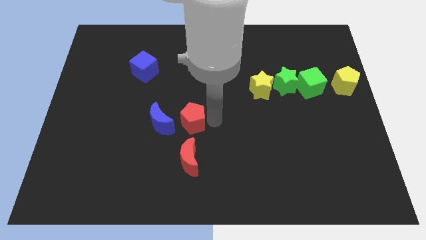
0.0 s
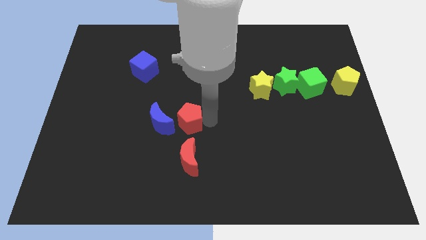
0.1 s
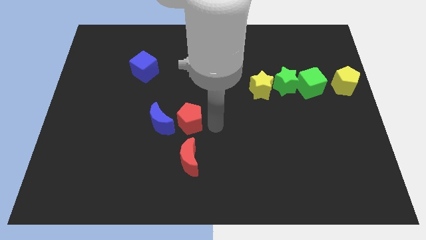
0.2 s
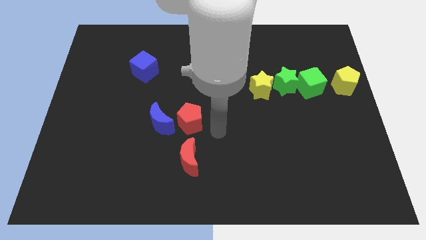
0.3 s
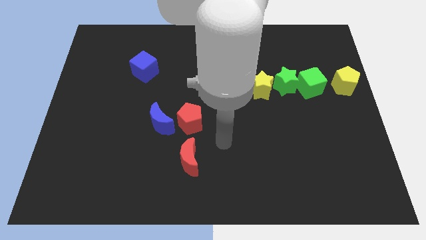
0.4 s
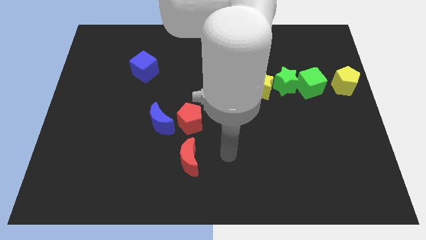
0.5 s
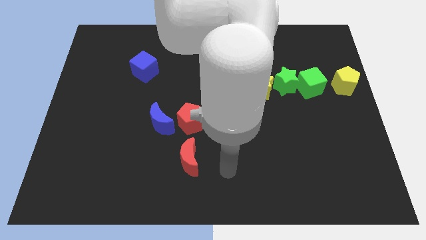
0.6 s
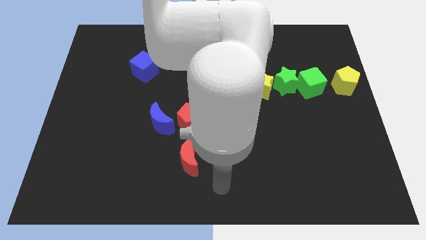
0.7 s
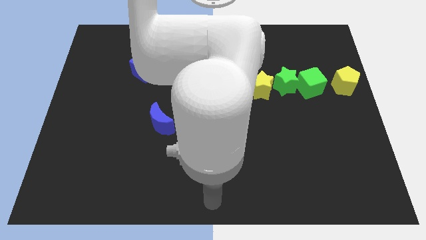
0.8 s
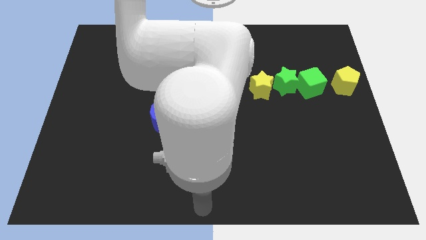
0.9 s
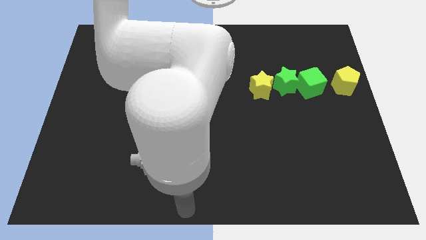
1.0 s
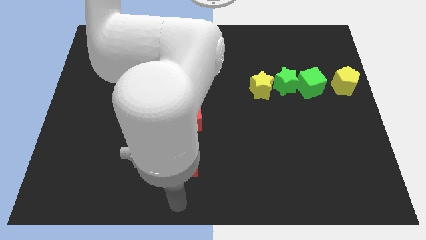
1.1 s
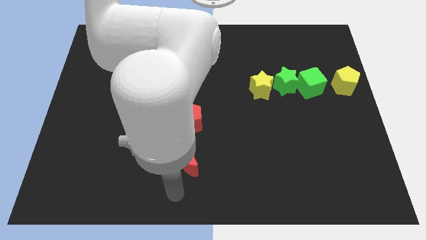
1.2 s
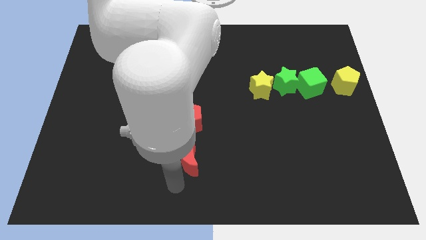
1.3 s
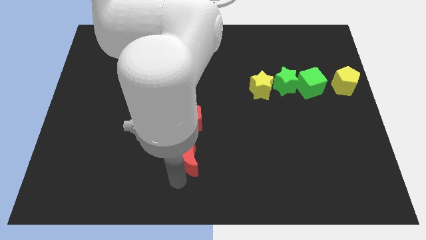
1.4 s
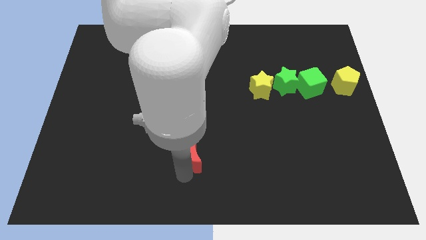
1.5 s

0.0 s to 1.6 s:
point your arm below red moon

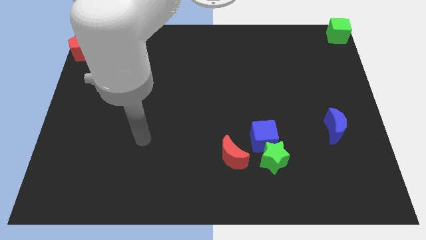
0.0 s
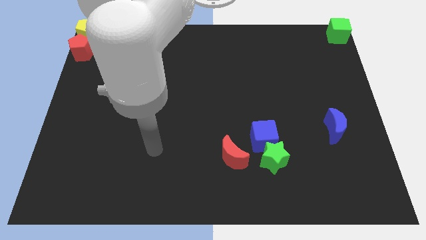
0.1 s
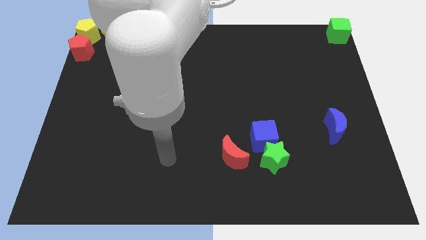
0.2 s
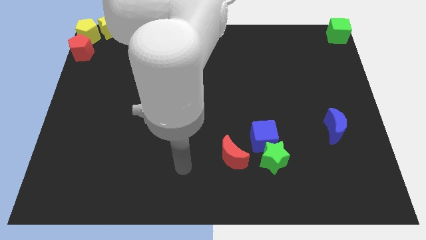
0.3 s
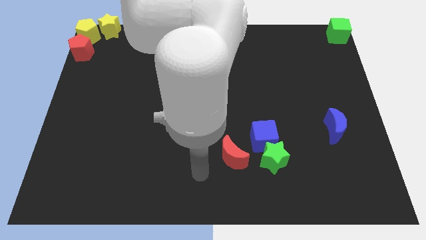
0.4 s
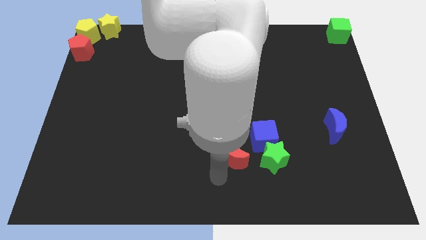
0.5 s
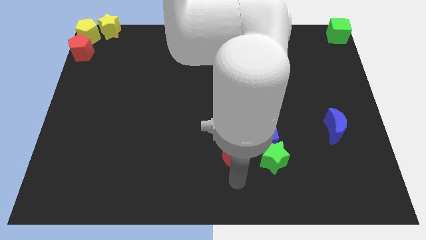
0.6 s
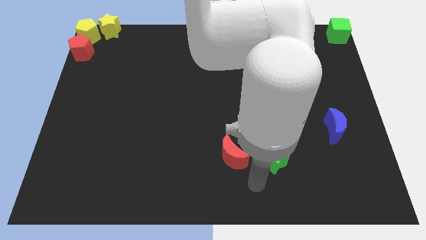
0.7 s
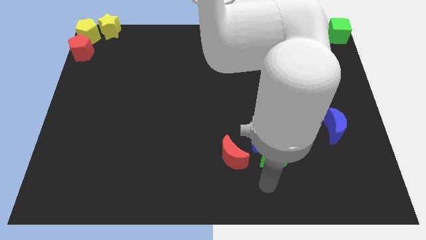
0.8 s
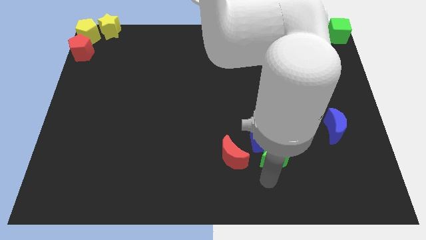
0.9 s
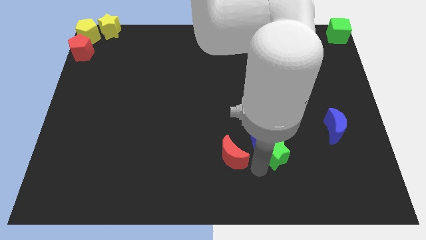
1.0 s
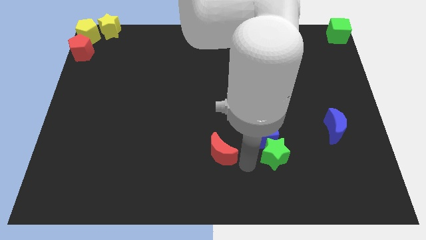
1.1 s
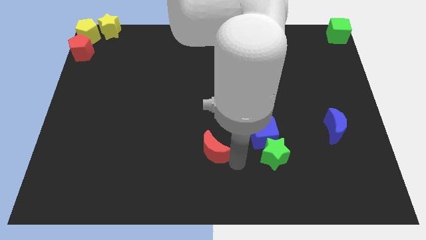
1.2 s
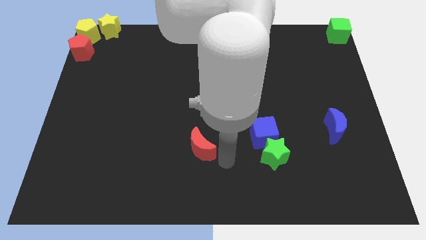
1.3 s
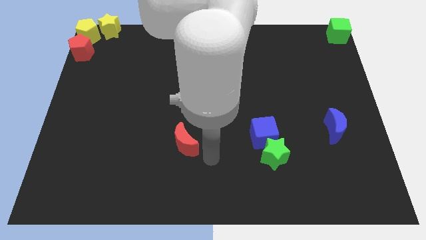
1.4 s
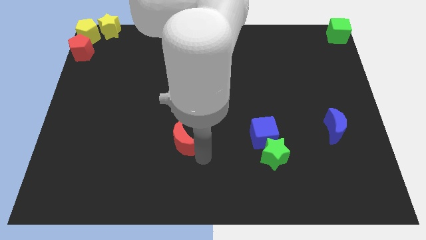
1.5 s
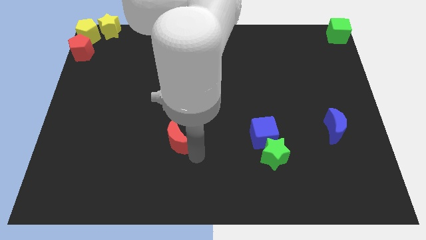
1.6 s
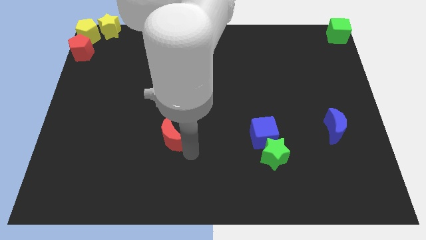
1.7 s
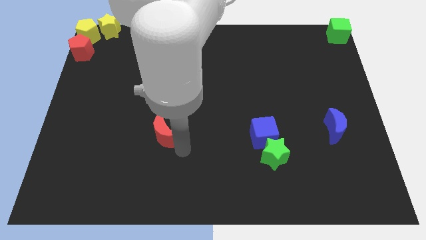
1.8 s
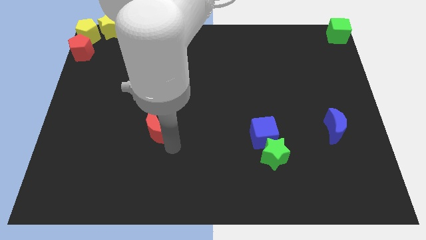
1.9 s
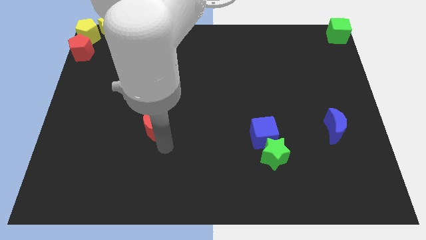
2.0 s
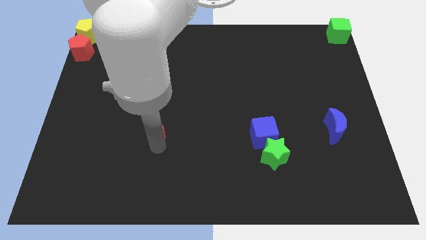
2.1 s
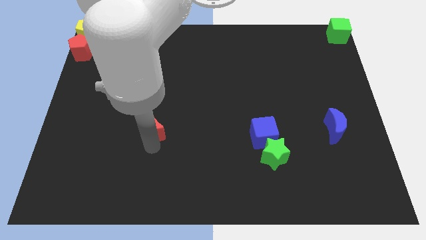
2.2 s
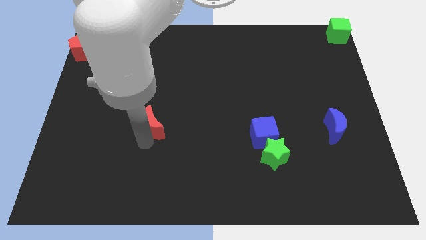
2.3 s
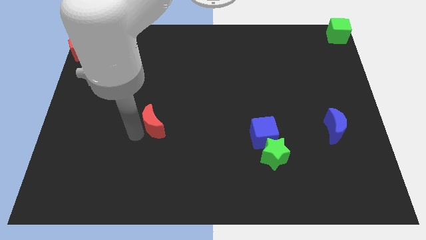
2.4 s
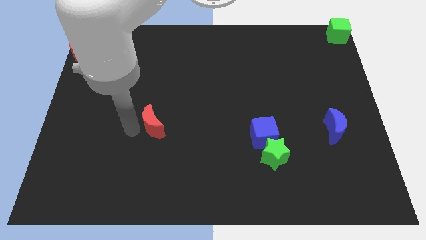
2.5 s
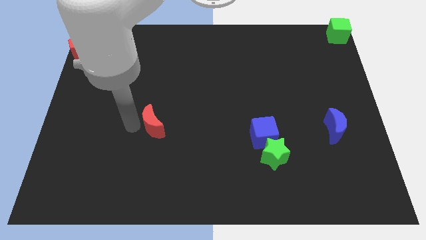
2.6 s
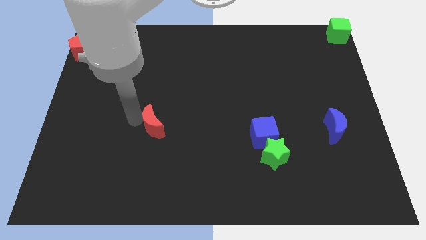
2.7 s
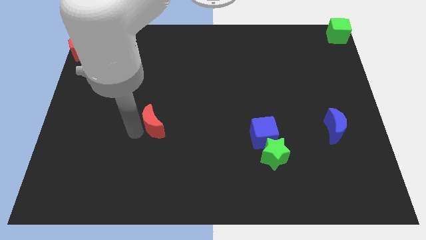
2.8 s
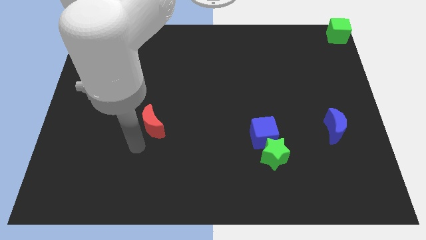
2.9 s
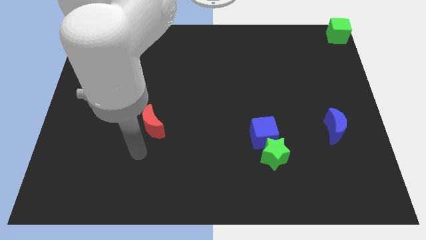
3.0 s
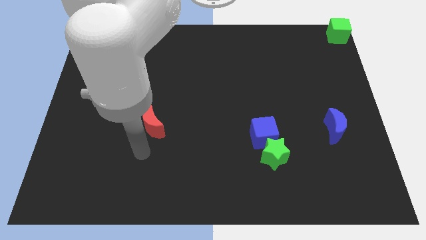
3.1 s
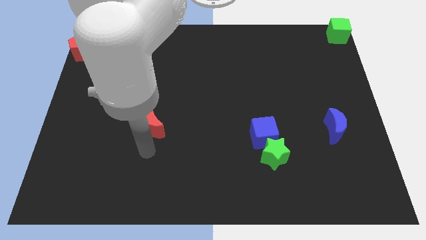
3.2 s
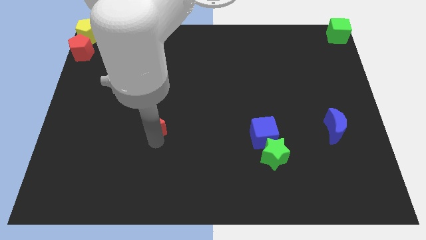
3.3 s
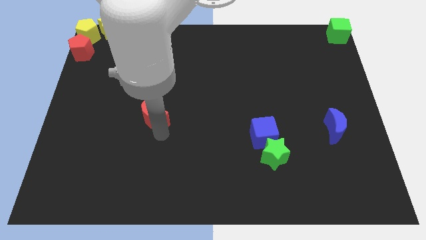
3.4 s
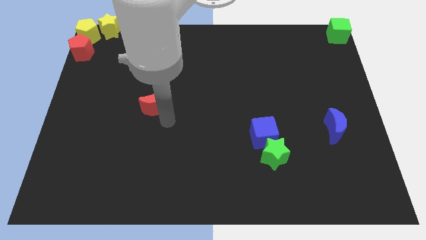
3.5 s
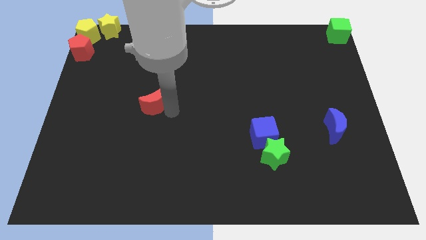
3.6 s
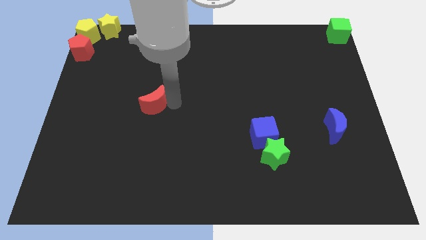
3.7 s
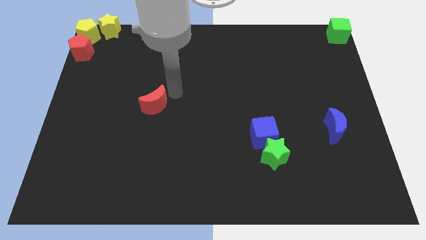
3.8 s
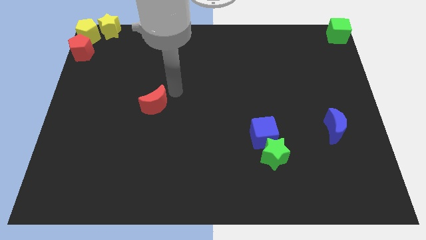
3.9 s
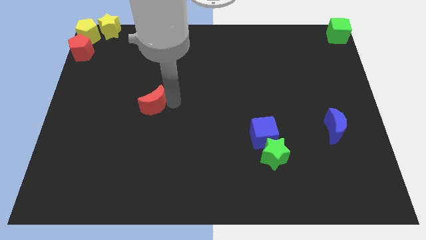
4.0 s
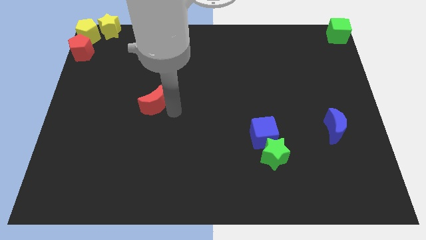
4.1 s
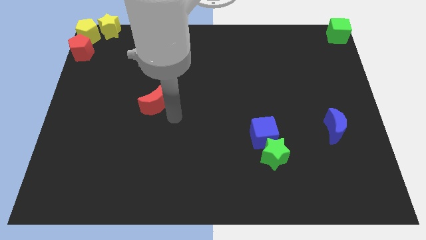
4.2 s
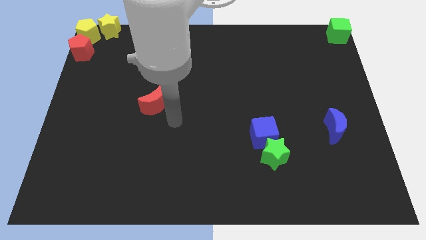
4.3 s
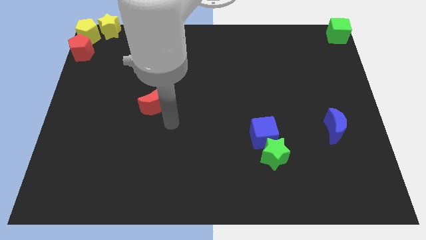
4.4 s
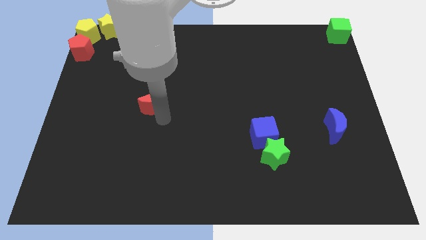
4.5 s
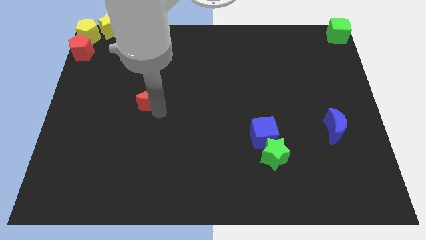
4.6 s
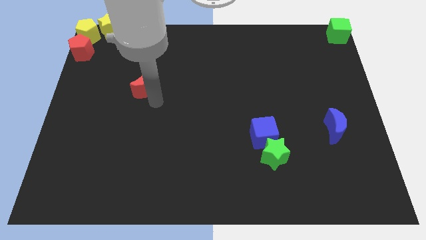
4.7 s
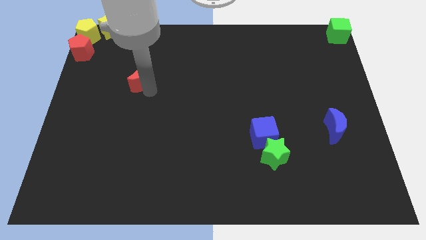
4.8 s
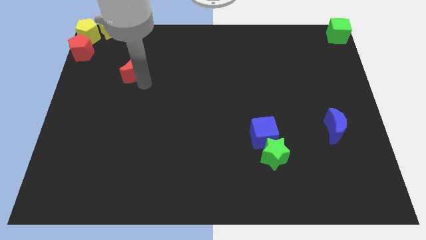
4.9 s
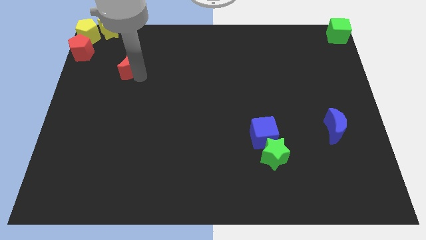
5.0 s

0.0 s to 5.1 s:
move the red crescent to the top of the board

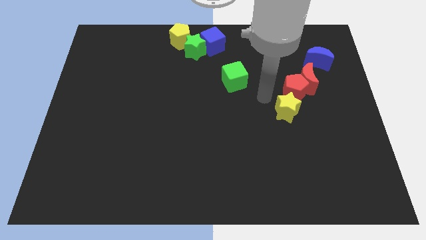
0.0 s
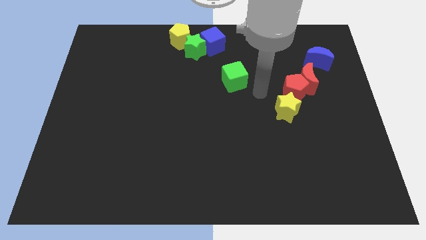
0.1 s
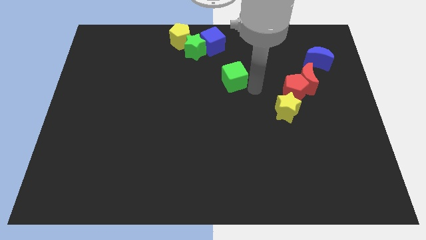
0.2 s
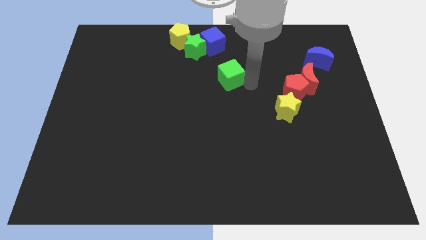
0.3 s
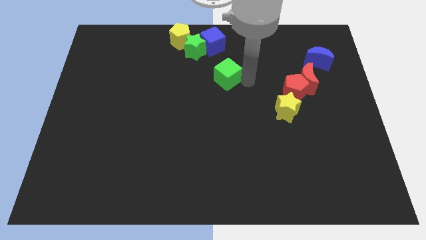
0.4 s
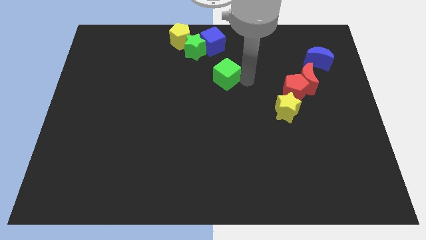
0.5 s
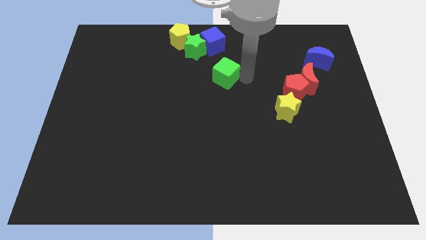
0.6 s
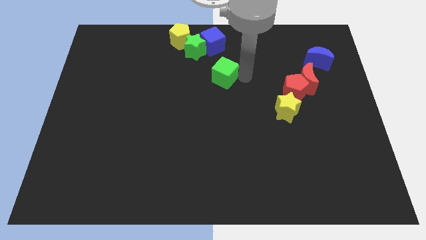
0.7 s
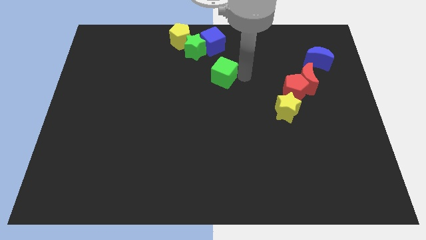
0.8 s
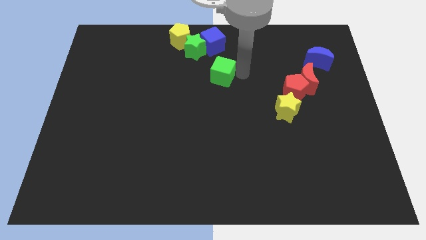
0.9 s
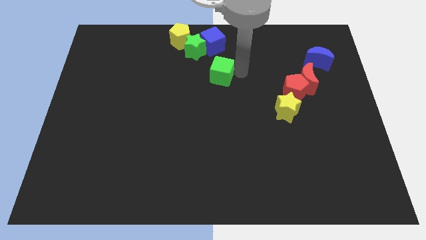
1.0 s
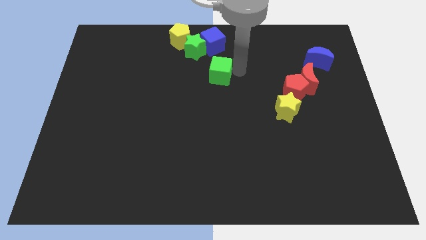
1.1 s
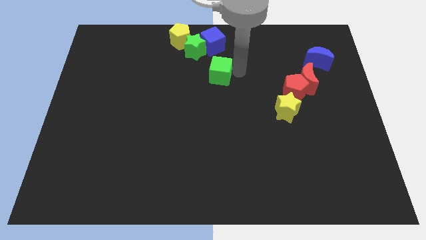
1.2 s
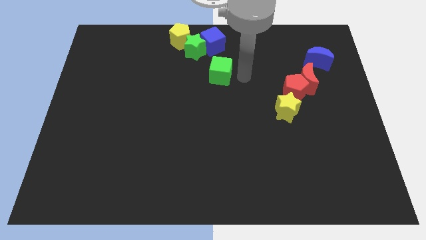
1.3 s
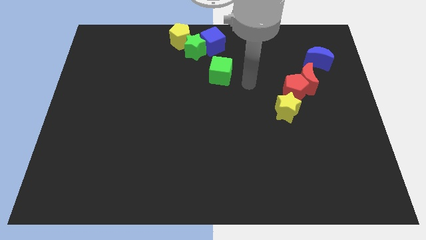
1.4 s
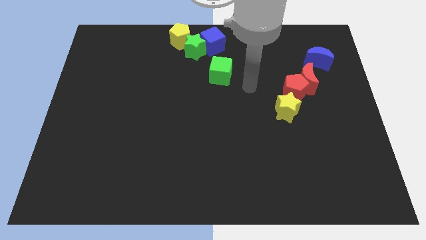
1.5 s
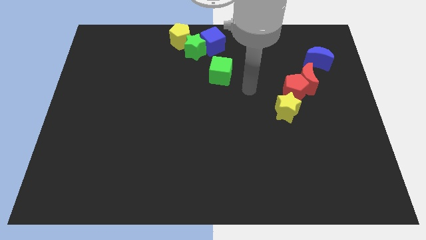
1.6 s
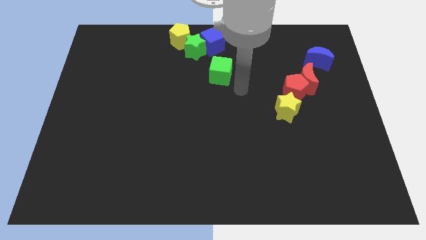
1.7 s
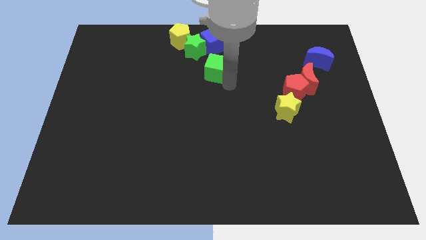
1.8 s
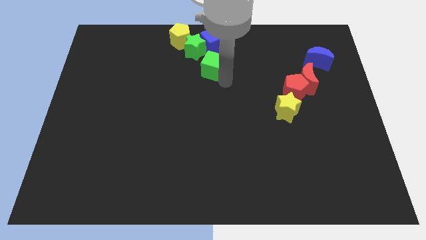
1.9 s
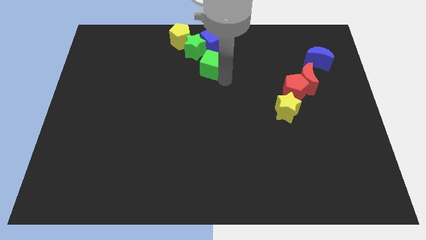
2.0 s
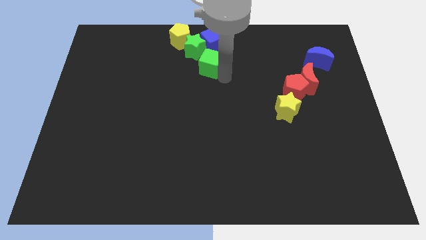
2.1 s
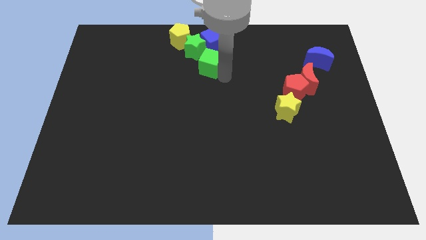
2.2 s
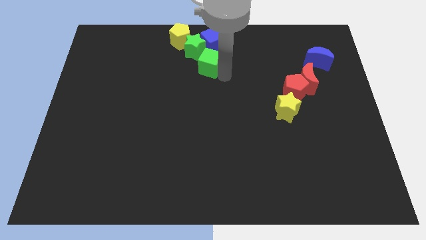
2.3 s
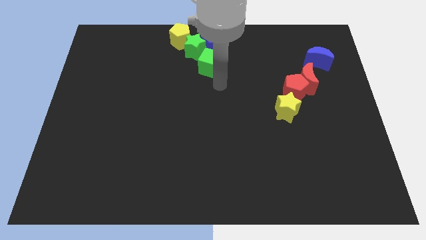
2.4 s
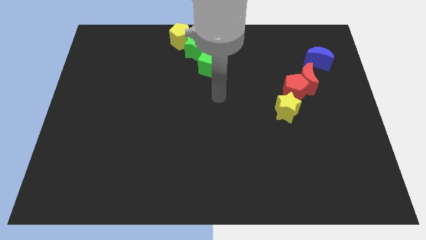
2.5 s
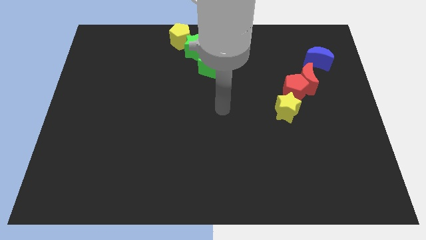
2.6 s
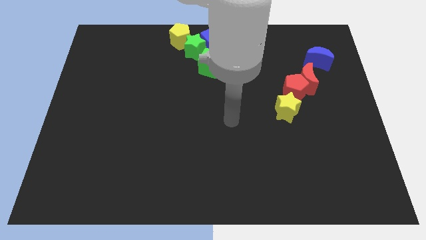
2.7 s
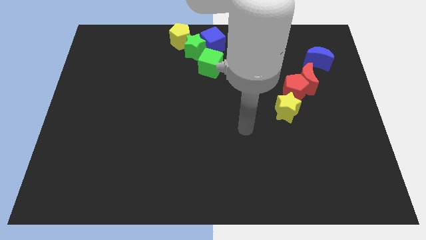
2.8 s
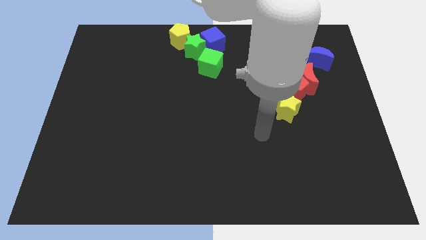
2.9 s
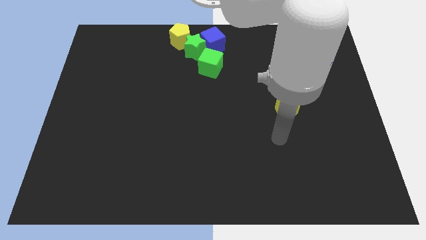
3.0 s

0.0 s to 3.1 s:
move green cube towards green star
